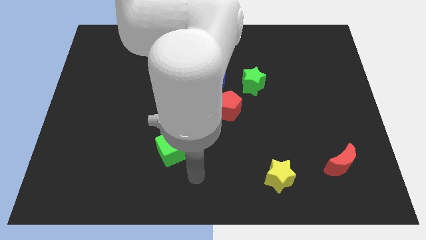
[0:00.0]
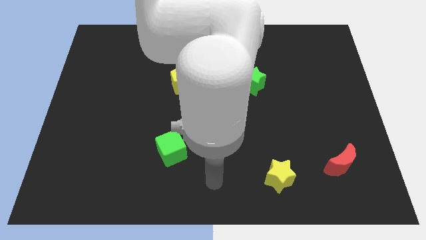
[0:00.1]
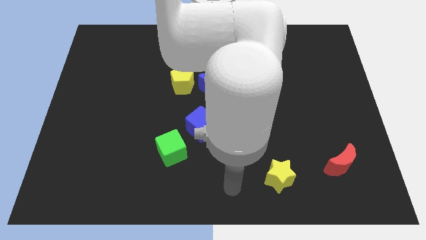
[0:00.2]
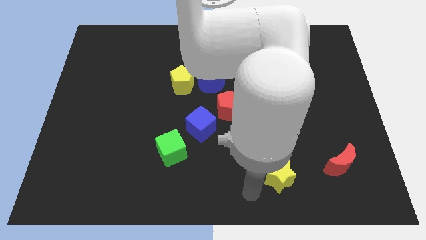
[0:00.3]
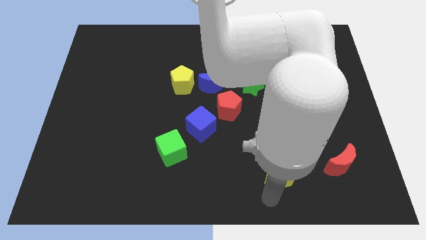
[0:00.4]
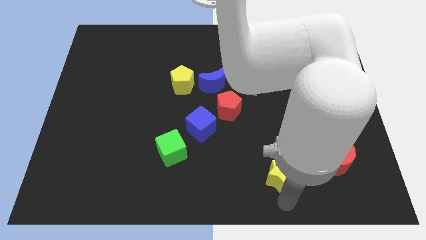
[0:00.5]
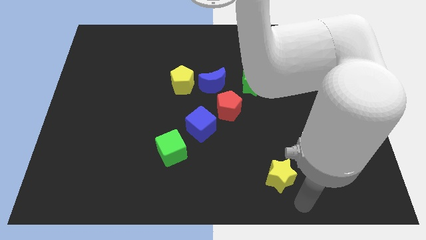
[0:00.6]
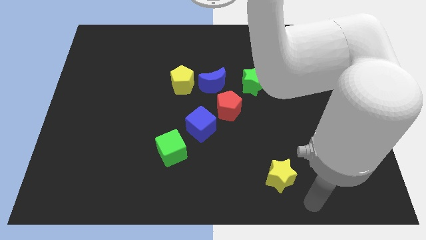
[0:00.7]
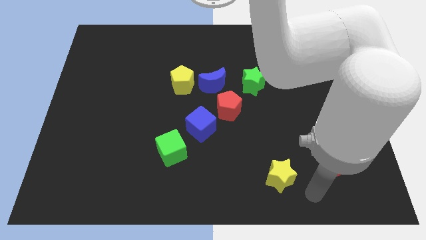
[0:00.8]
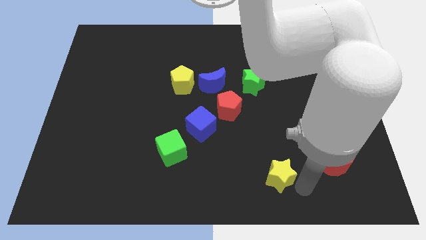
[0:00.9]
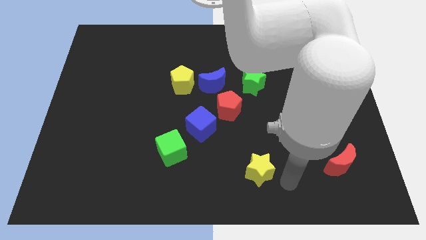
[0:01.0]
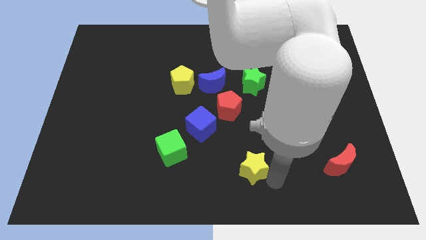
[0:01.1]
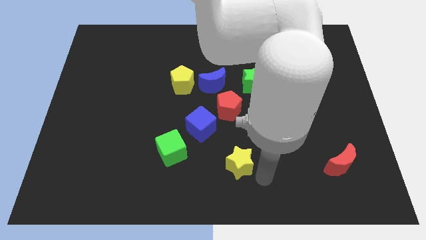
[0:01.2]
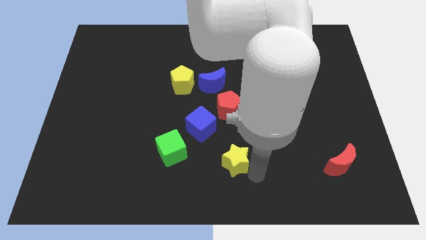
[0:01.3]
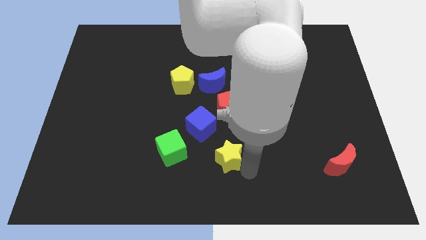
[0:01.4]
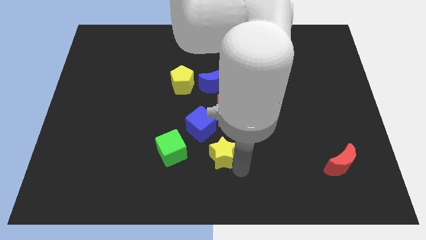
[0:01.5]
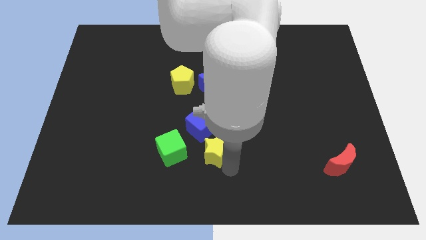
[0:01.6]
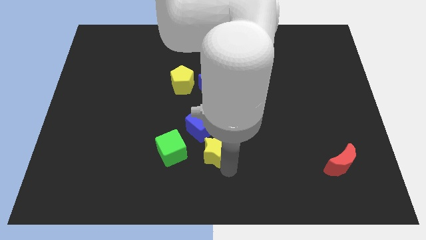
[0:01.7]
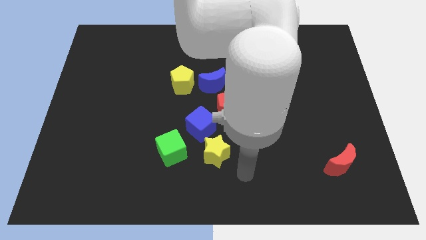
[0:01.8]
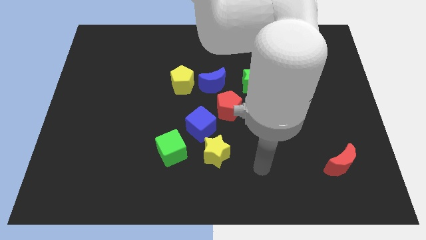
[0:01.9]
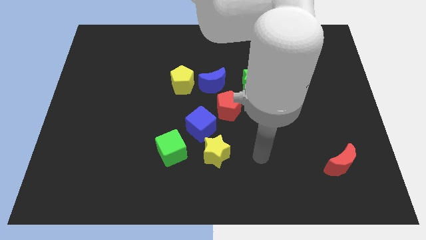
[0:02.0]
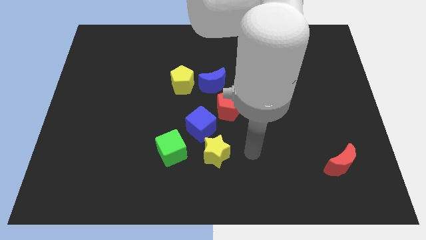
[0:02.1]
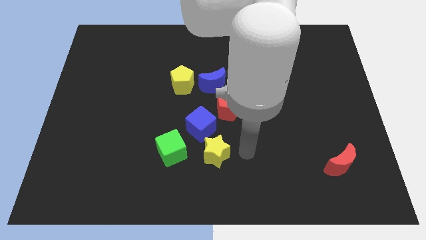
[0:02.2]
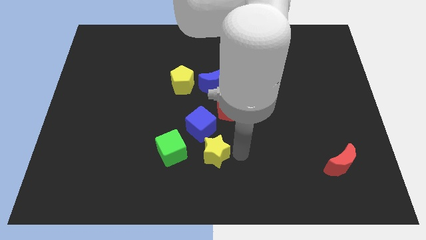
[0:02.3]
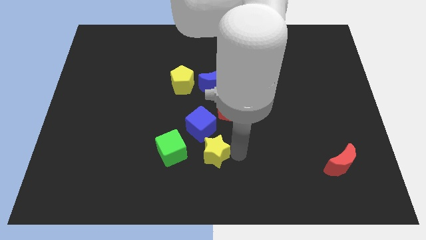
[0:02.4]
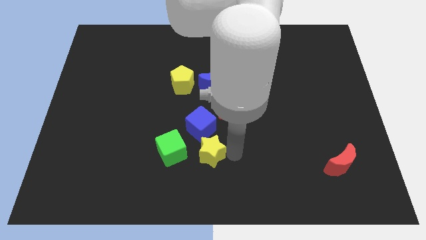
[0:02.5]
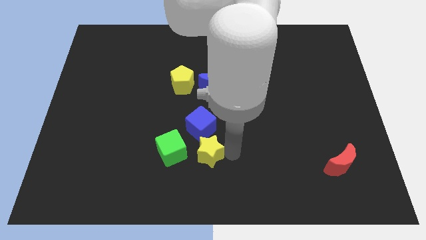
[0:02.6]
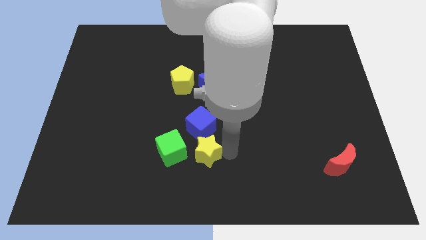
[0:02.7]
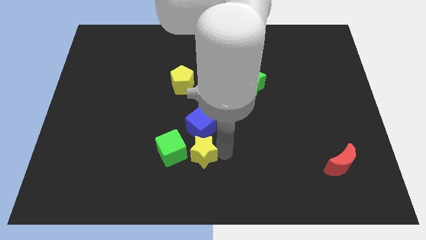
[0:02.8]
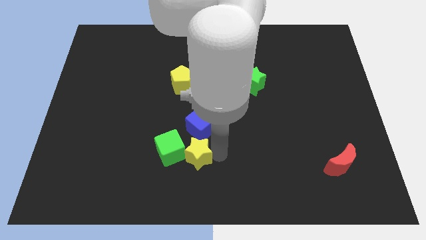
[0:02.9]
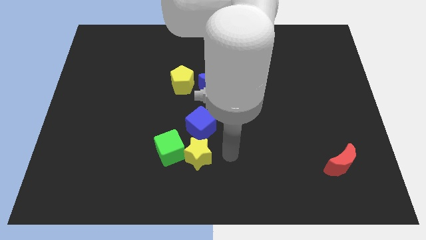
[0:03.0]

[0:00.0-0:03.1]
move the yellow star into the right side of the green cube

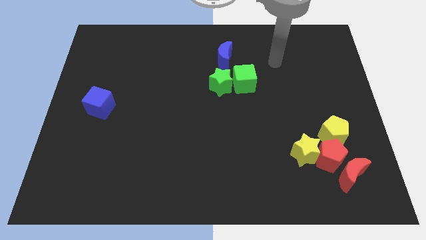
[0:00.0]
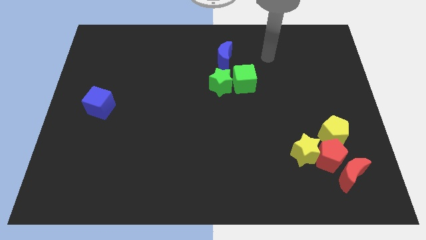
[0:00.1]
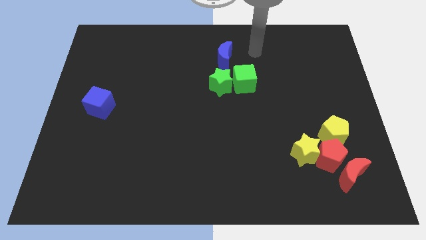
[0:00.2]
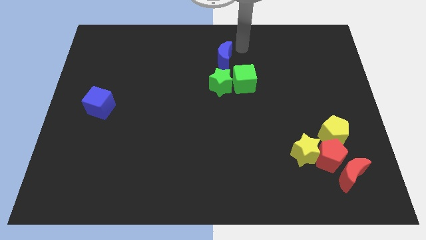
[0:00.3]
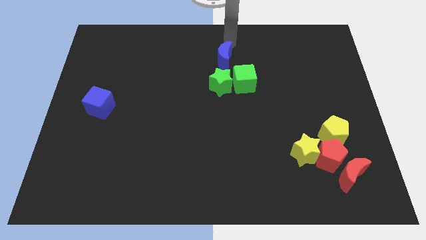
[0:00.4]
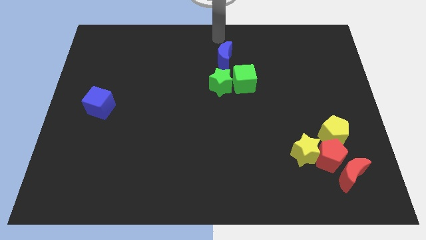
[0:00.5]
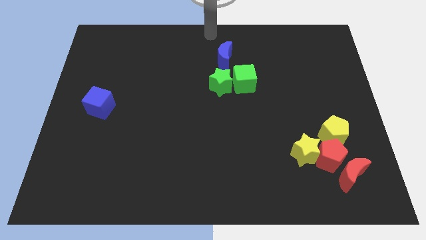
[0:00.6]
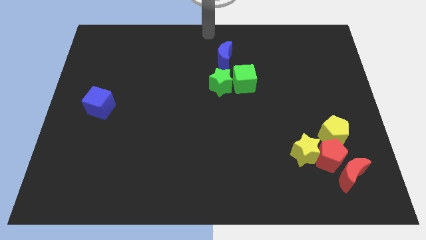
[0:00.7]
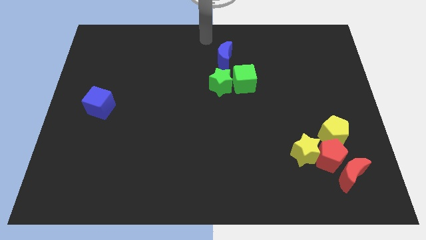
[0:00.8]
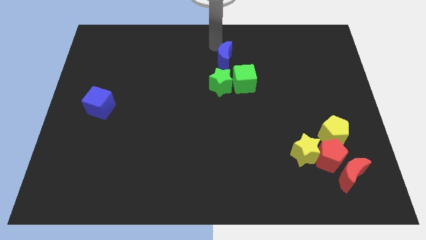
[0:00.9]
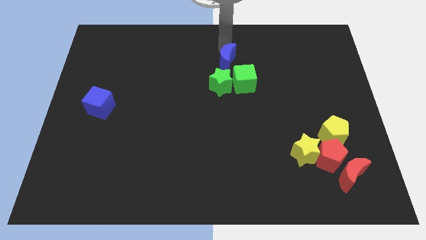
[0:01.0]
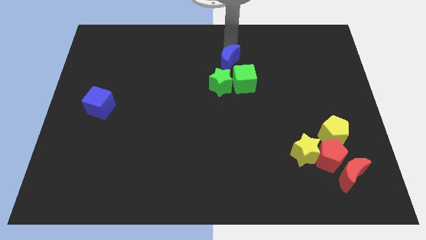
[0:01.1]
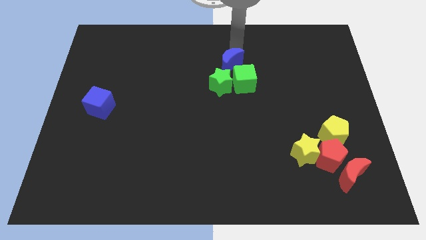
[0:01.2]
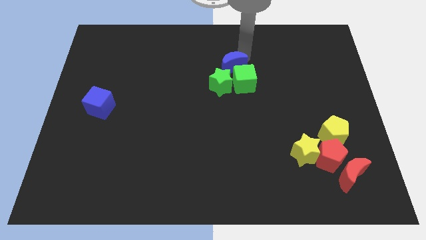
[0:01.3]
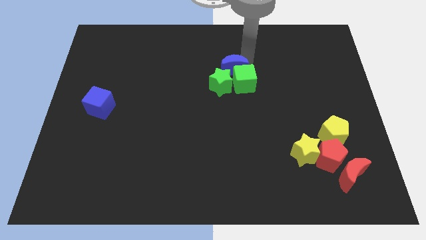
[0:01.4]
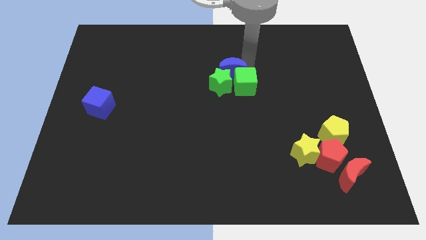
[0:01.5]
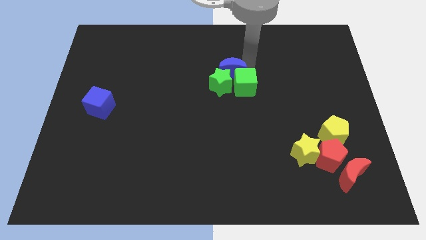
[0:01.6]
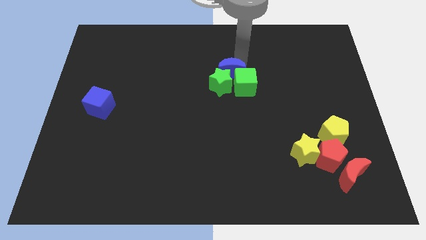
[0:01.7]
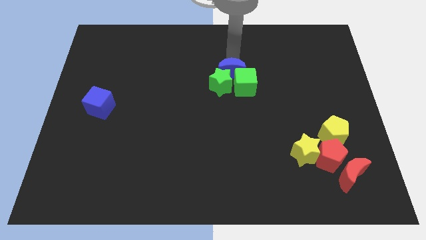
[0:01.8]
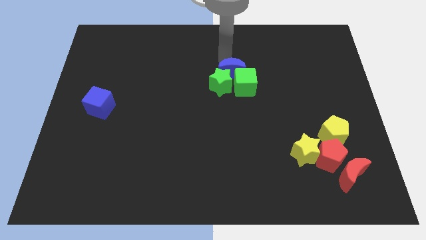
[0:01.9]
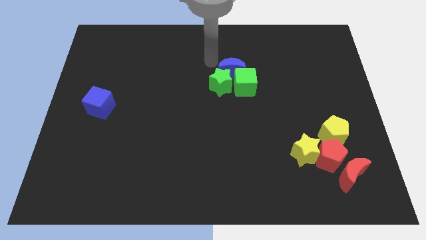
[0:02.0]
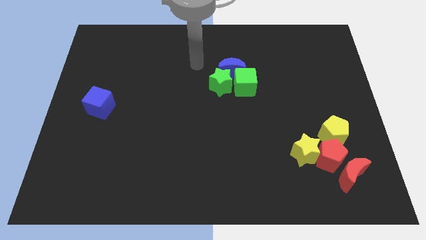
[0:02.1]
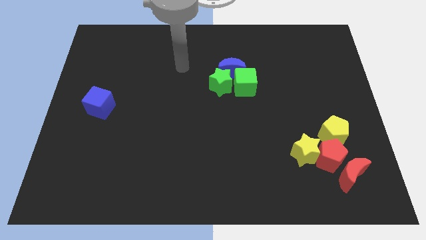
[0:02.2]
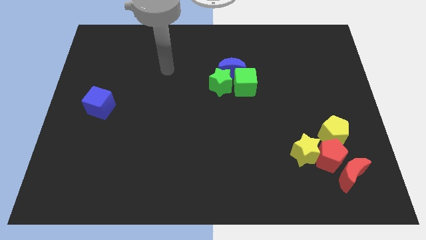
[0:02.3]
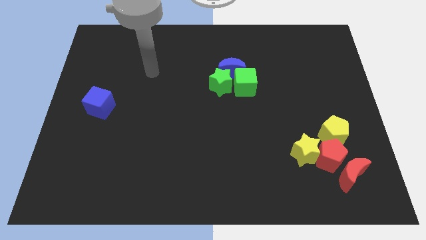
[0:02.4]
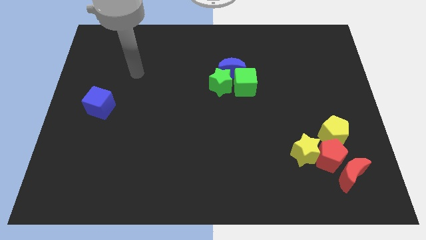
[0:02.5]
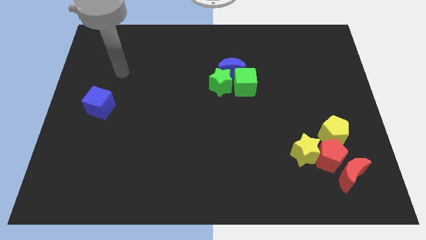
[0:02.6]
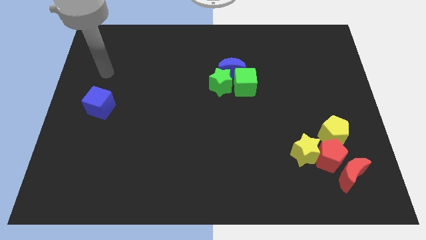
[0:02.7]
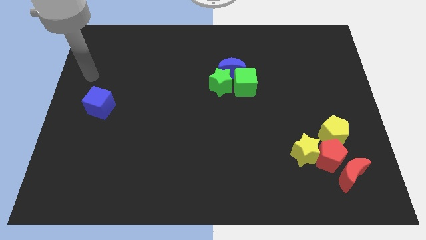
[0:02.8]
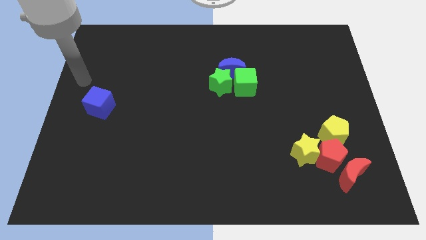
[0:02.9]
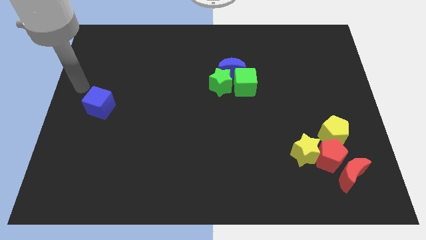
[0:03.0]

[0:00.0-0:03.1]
push the blue crescent into the green blocks

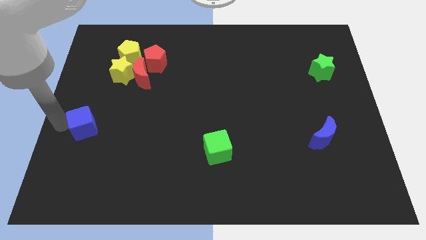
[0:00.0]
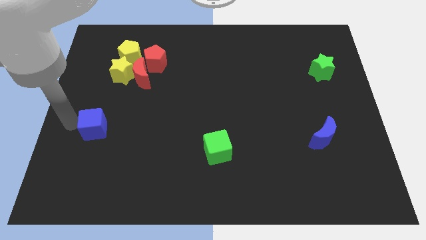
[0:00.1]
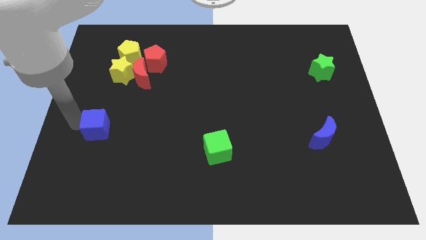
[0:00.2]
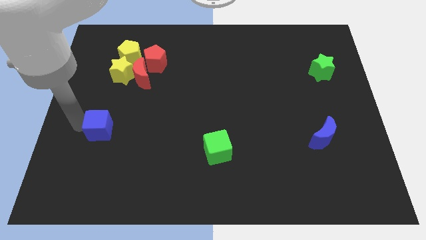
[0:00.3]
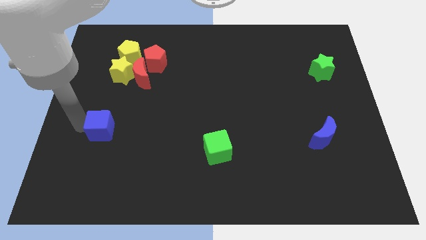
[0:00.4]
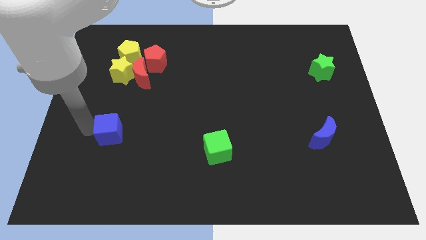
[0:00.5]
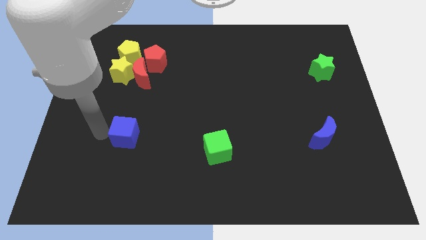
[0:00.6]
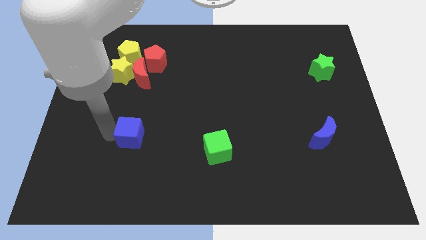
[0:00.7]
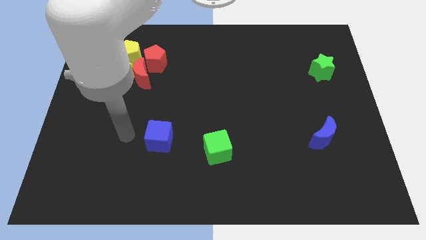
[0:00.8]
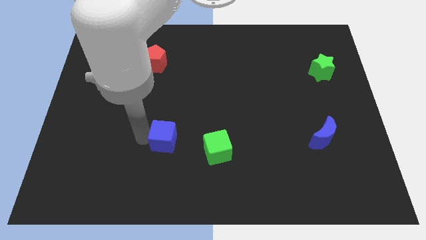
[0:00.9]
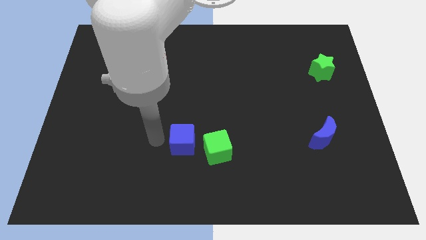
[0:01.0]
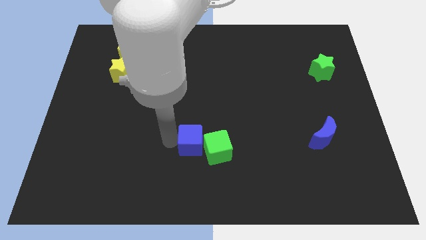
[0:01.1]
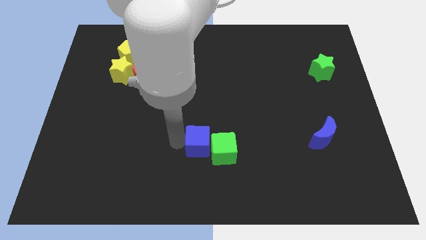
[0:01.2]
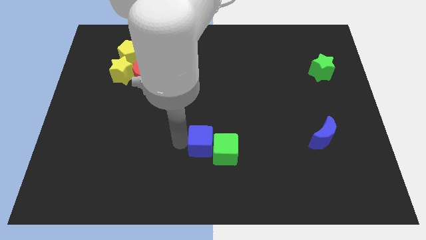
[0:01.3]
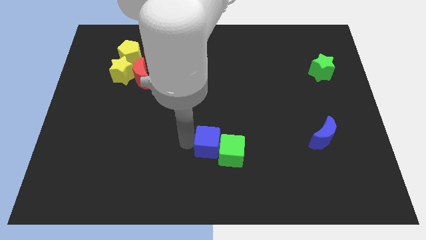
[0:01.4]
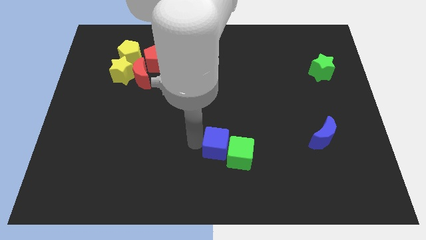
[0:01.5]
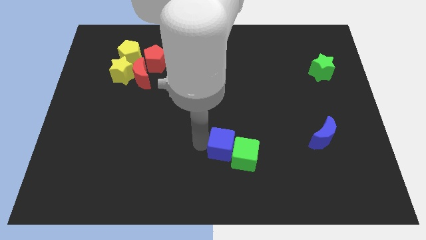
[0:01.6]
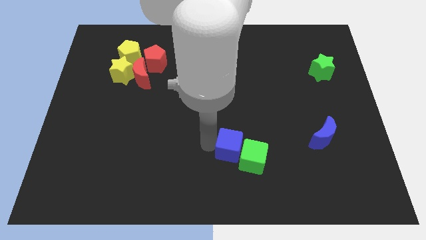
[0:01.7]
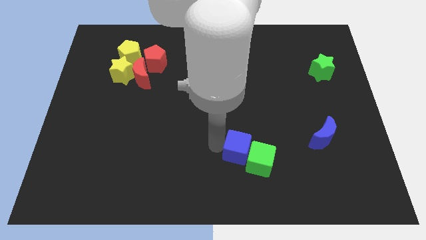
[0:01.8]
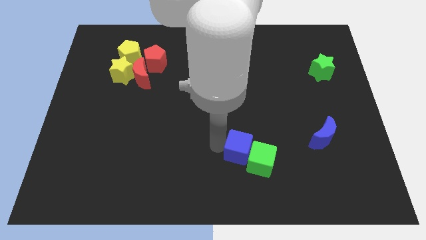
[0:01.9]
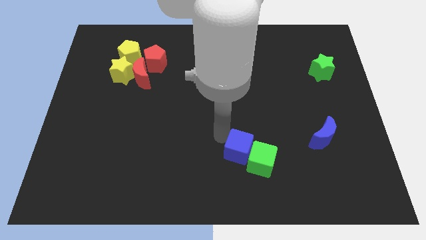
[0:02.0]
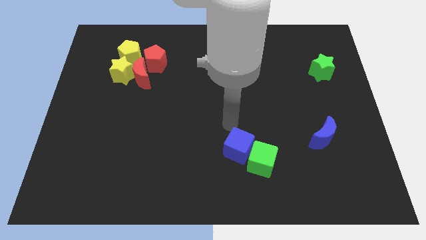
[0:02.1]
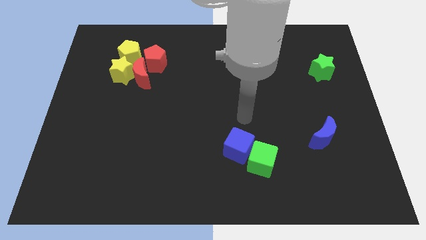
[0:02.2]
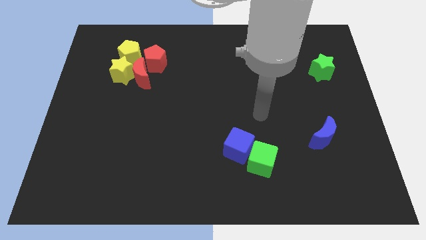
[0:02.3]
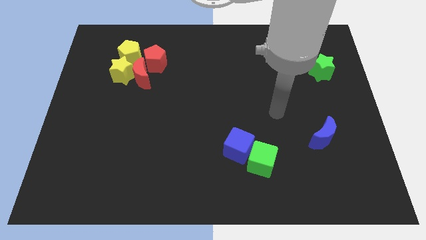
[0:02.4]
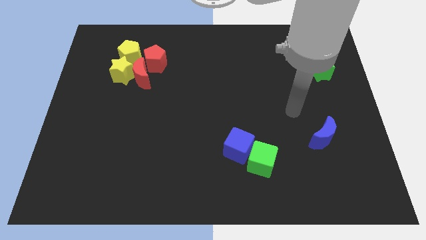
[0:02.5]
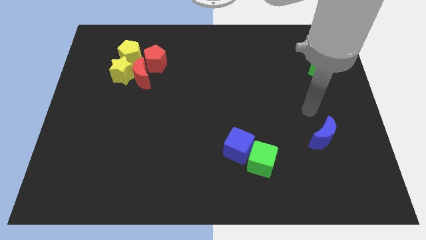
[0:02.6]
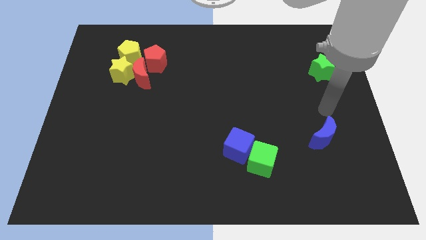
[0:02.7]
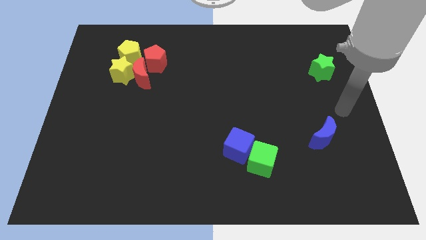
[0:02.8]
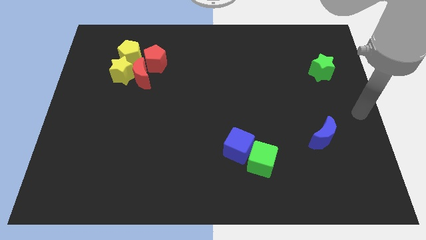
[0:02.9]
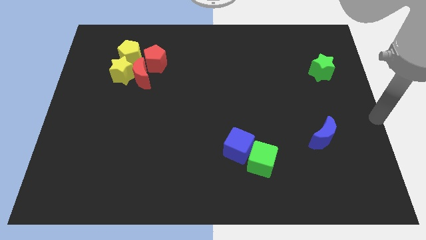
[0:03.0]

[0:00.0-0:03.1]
push the blue cube into the green cube
